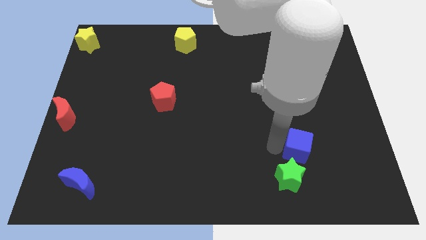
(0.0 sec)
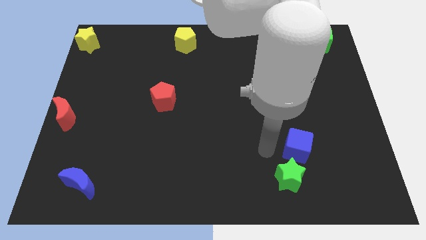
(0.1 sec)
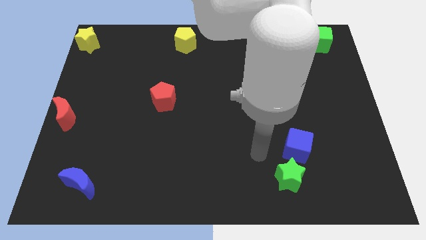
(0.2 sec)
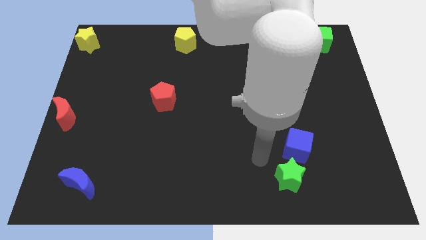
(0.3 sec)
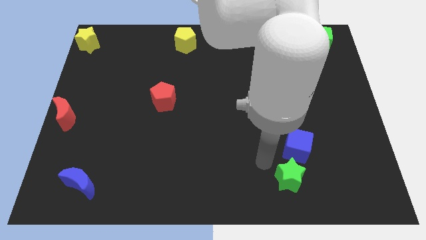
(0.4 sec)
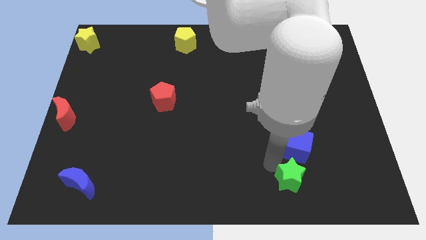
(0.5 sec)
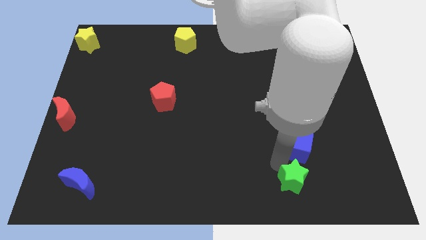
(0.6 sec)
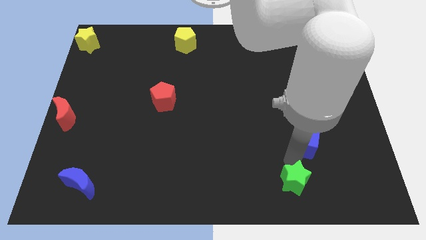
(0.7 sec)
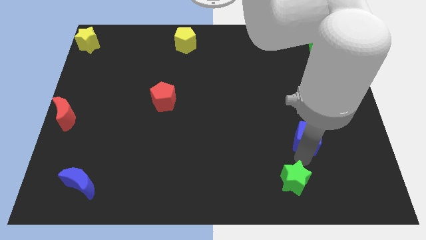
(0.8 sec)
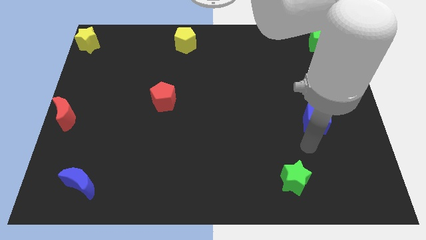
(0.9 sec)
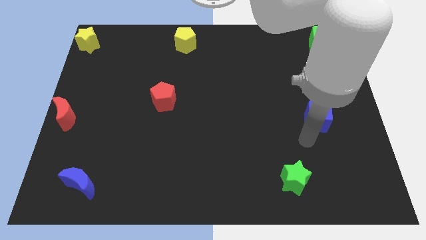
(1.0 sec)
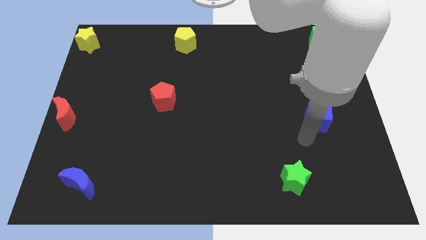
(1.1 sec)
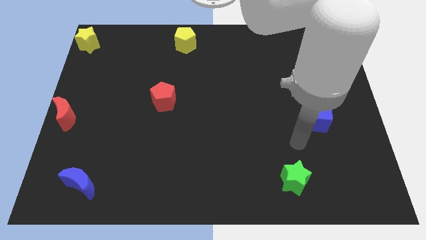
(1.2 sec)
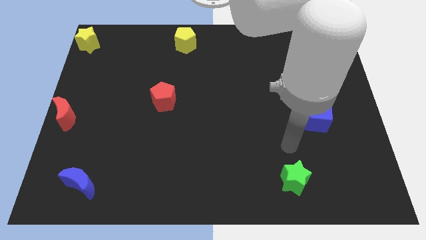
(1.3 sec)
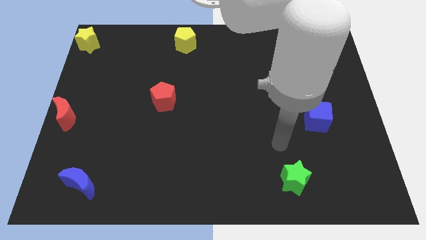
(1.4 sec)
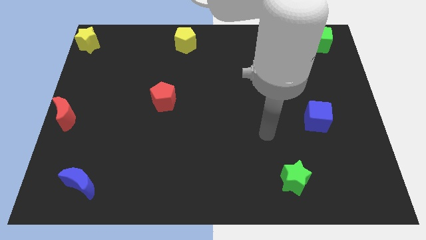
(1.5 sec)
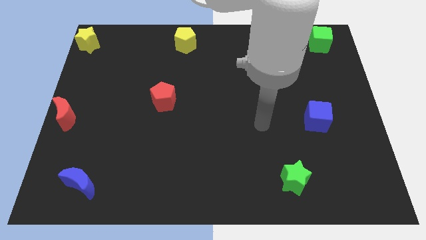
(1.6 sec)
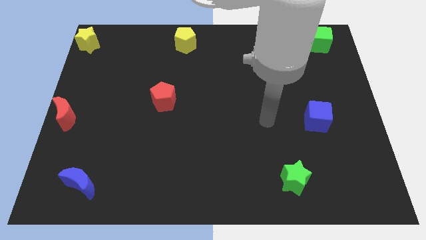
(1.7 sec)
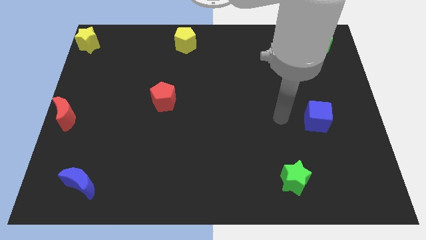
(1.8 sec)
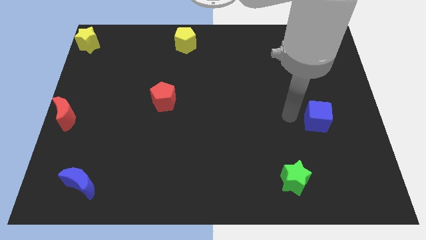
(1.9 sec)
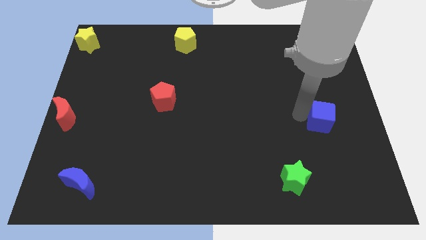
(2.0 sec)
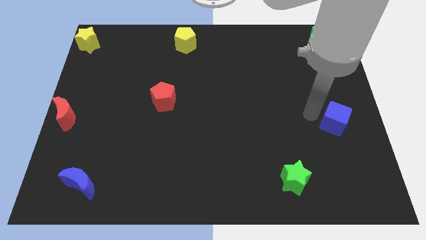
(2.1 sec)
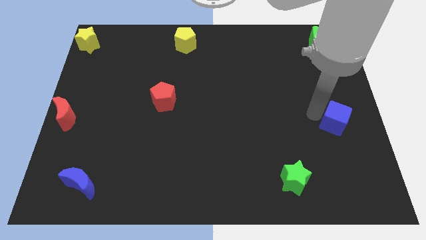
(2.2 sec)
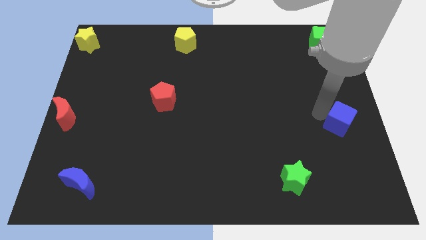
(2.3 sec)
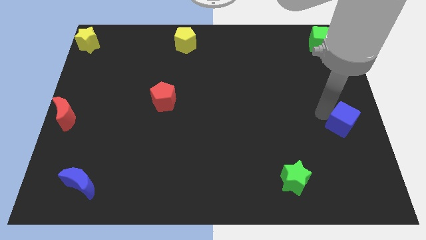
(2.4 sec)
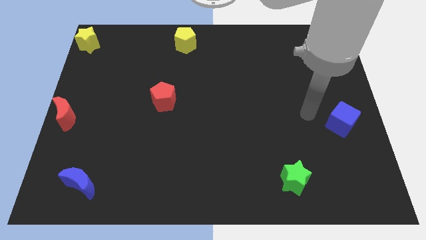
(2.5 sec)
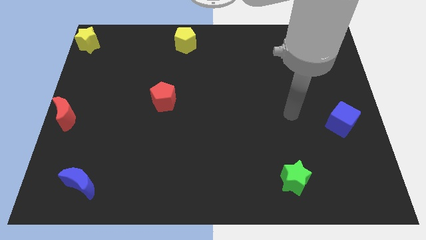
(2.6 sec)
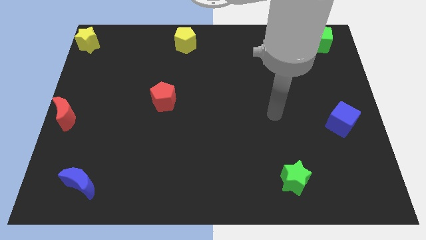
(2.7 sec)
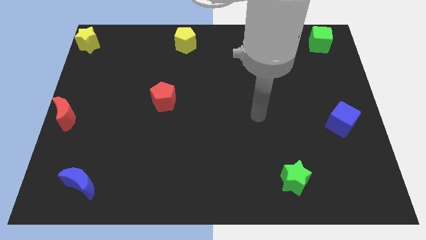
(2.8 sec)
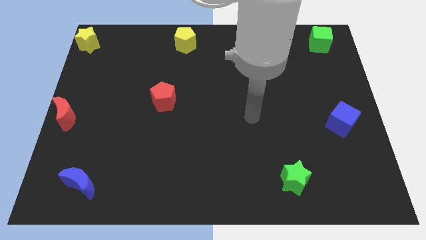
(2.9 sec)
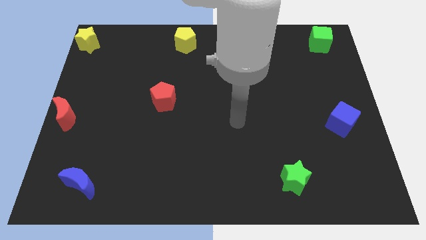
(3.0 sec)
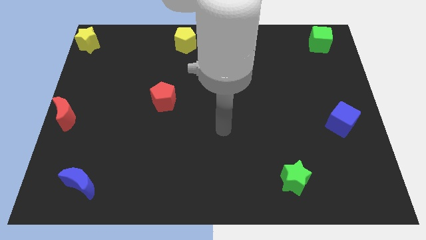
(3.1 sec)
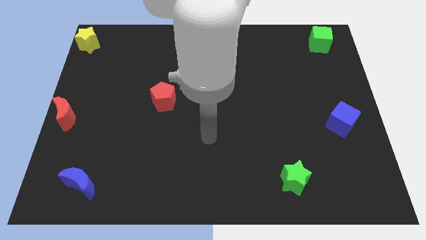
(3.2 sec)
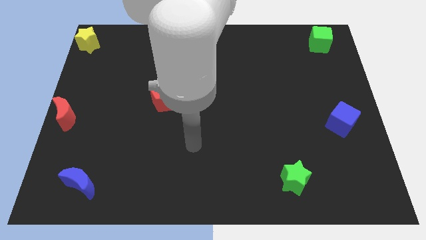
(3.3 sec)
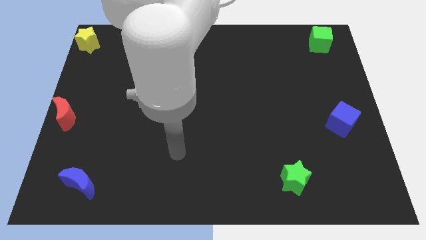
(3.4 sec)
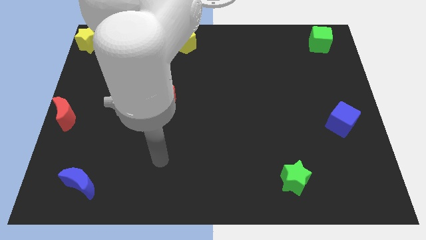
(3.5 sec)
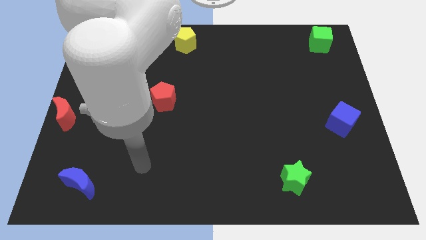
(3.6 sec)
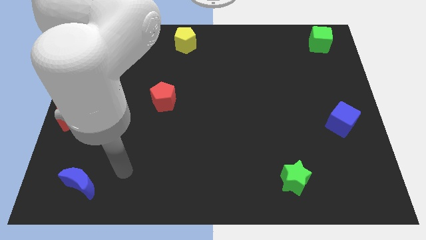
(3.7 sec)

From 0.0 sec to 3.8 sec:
slide the blue cube towards the right center of the board

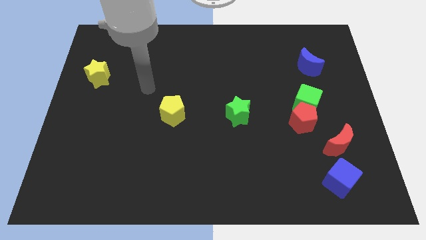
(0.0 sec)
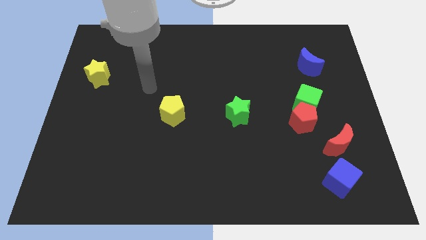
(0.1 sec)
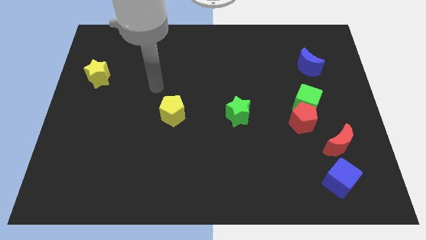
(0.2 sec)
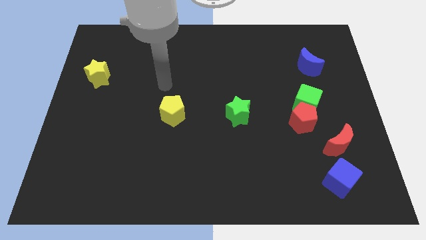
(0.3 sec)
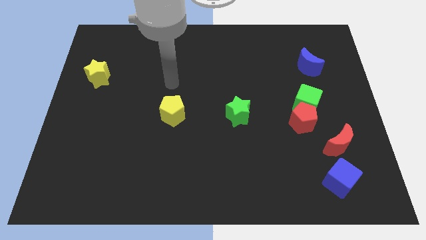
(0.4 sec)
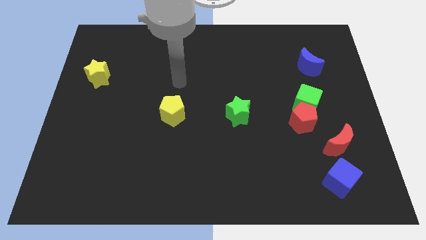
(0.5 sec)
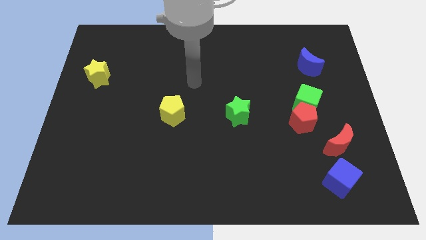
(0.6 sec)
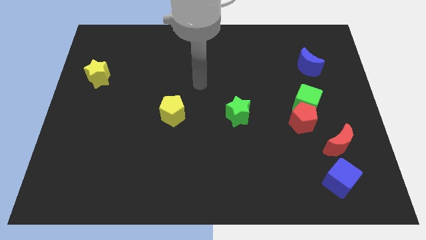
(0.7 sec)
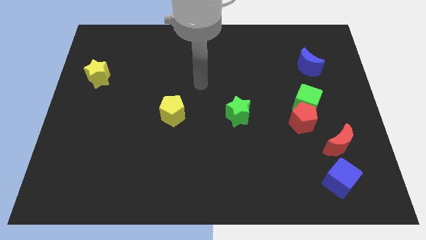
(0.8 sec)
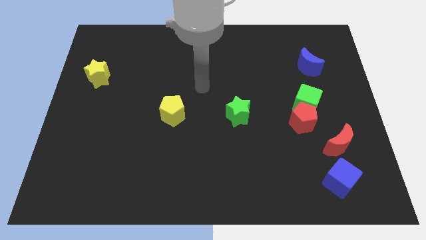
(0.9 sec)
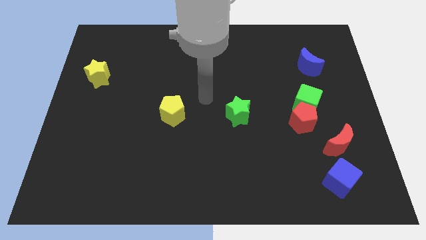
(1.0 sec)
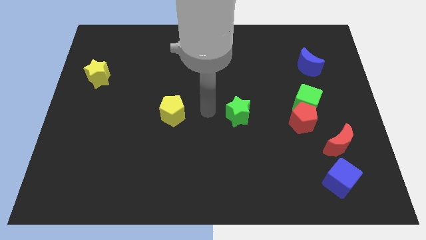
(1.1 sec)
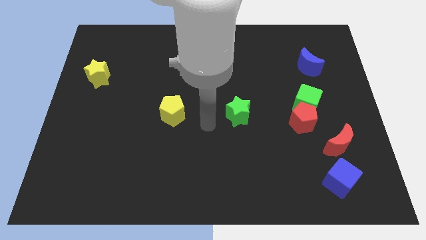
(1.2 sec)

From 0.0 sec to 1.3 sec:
place the arm between the yellow pentagon and the green star

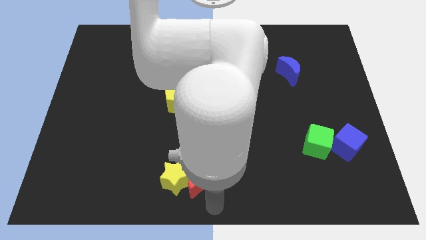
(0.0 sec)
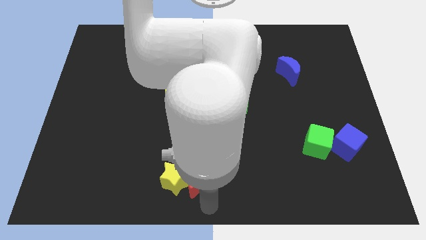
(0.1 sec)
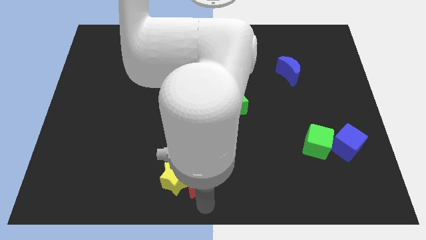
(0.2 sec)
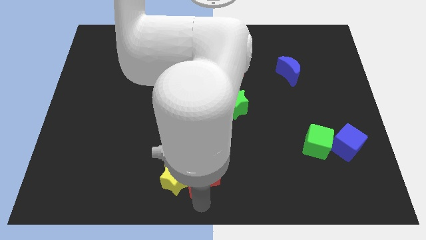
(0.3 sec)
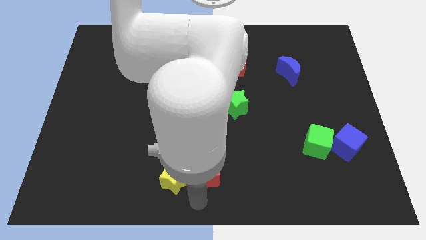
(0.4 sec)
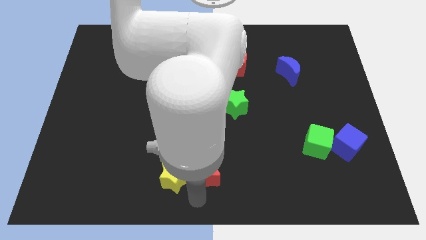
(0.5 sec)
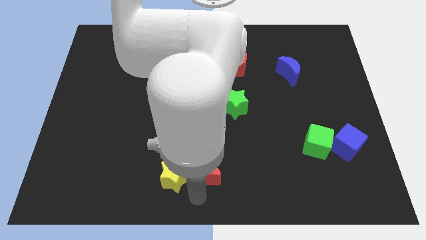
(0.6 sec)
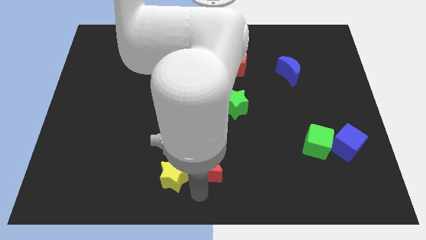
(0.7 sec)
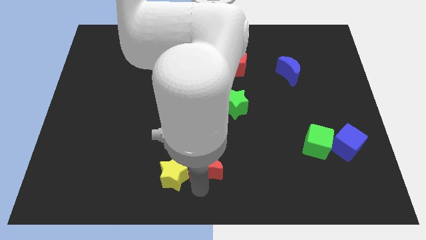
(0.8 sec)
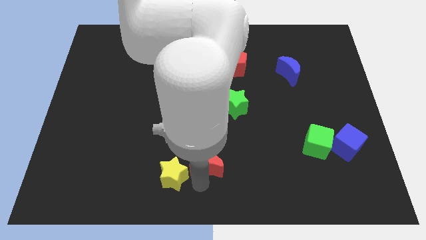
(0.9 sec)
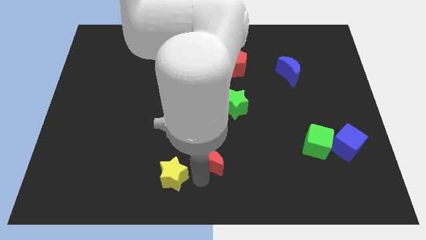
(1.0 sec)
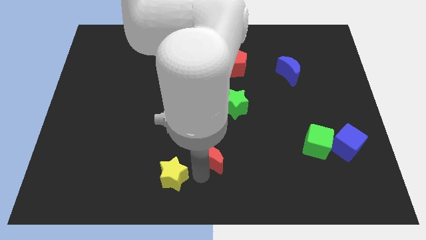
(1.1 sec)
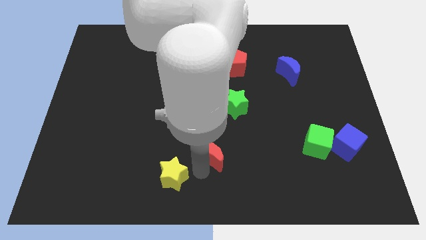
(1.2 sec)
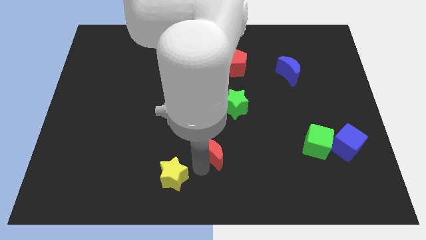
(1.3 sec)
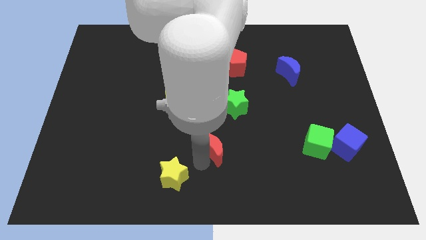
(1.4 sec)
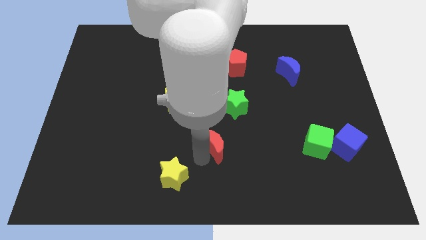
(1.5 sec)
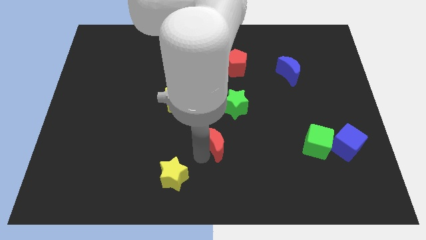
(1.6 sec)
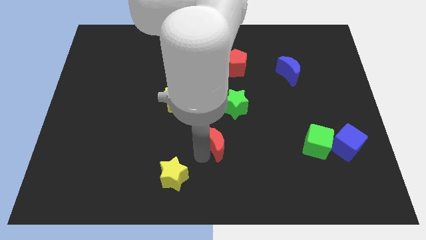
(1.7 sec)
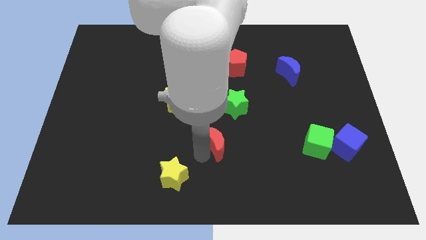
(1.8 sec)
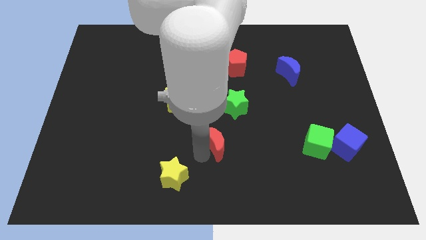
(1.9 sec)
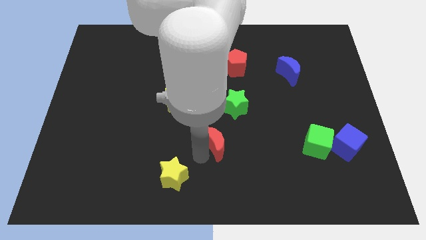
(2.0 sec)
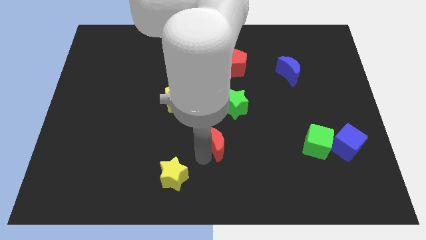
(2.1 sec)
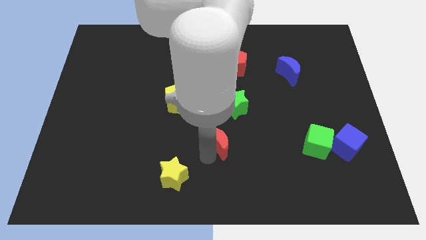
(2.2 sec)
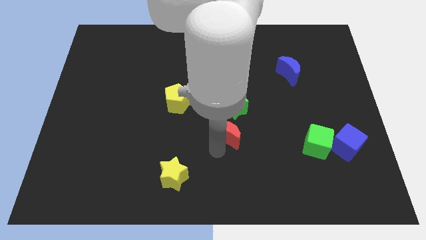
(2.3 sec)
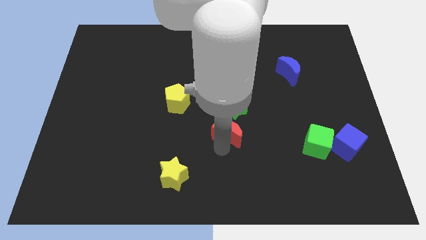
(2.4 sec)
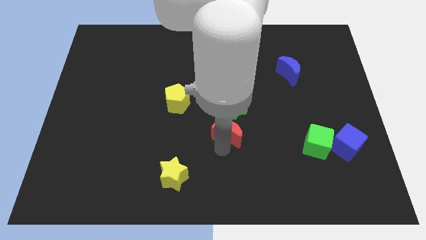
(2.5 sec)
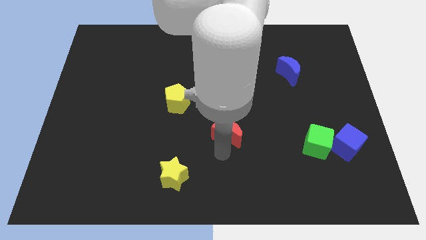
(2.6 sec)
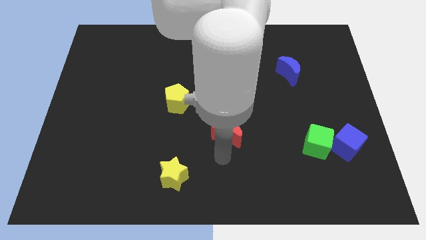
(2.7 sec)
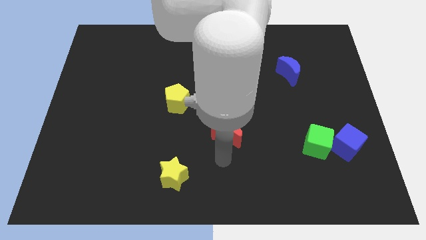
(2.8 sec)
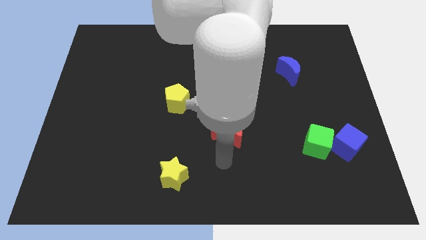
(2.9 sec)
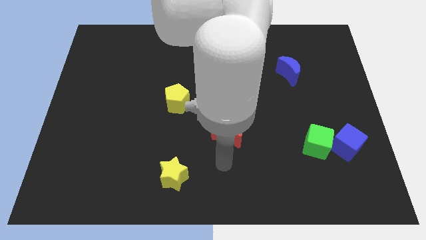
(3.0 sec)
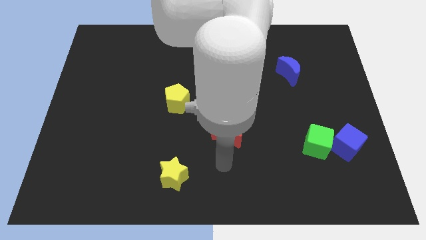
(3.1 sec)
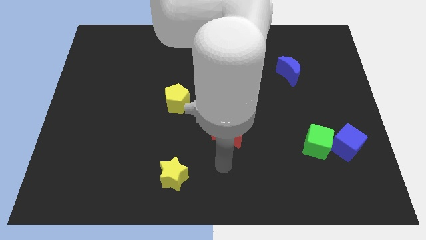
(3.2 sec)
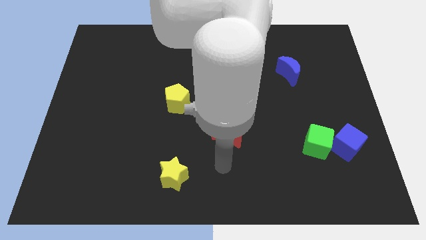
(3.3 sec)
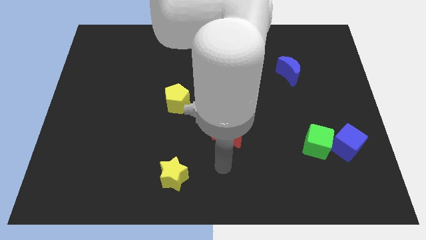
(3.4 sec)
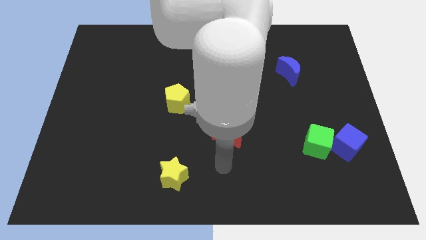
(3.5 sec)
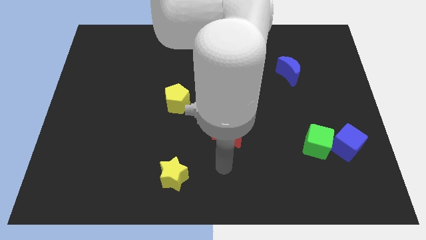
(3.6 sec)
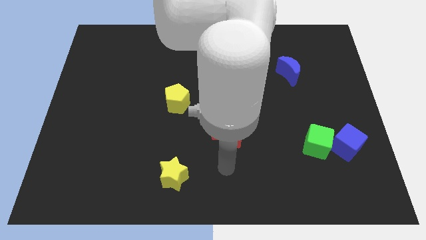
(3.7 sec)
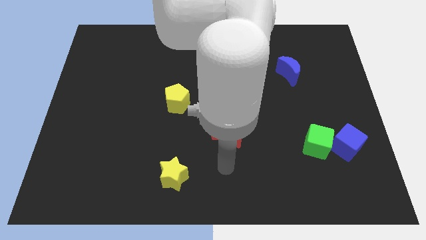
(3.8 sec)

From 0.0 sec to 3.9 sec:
push the red crescent below the green star
